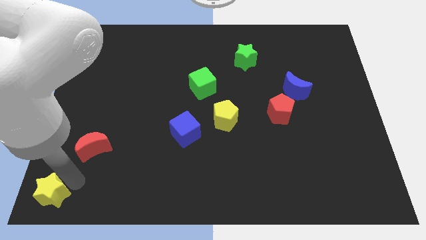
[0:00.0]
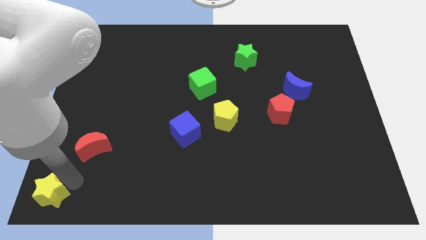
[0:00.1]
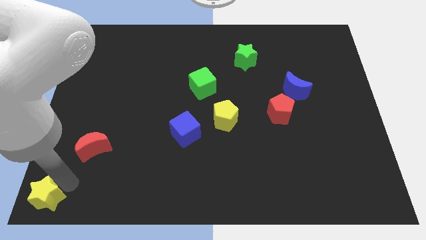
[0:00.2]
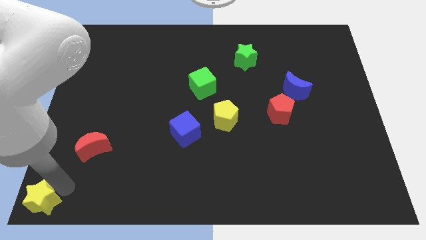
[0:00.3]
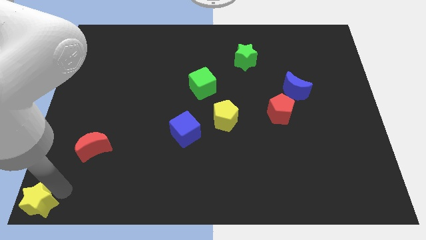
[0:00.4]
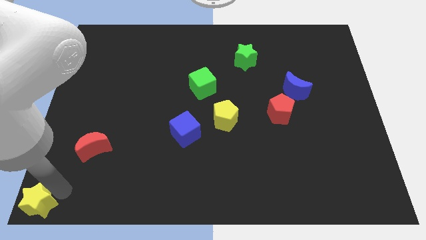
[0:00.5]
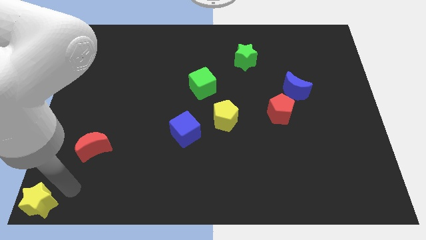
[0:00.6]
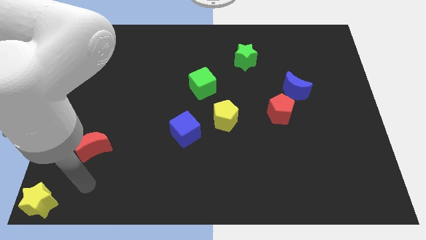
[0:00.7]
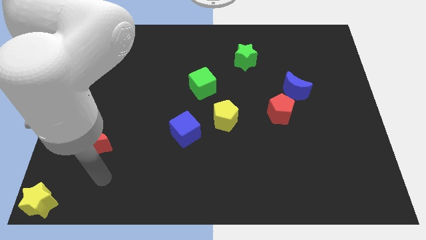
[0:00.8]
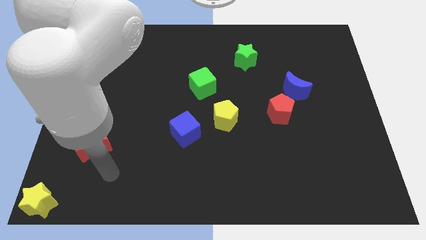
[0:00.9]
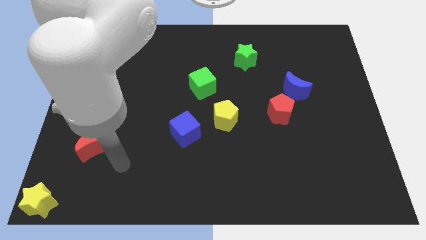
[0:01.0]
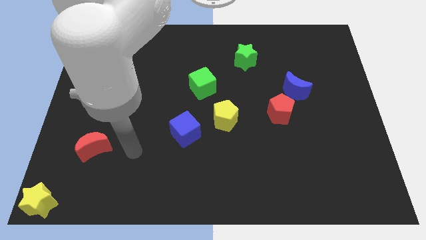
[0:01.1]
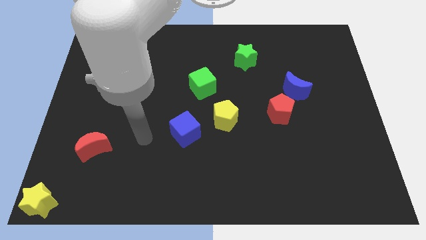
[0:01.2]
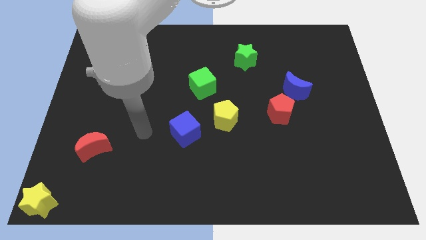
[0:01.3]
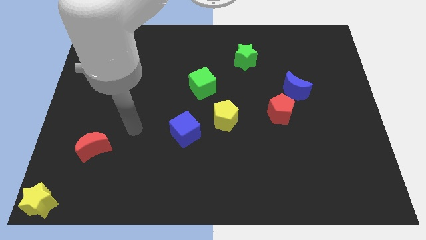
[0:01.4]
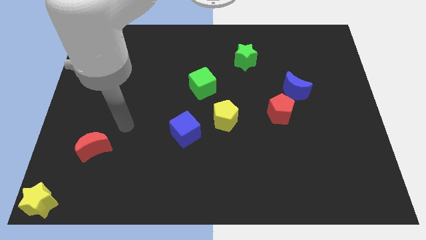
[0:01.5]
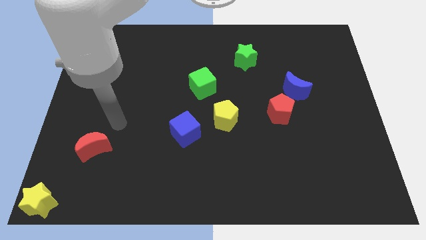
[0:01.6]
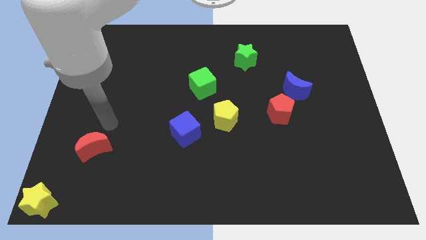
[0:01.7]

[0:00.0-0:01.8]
move the yellow star to the bottom left

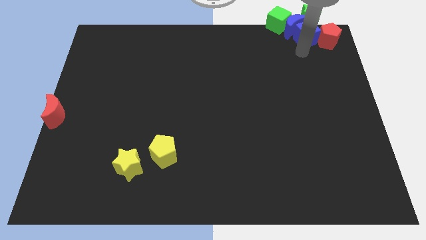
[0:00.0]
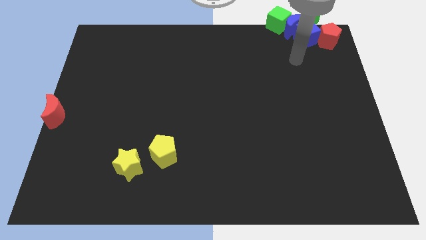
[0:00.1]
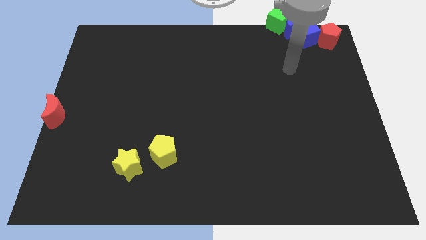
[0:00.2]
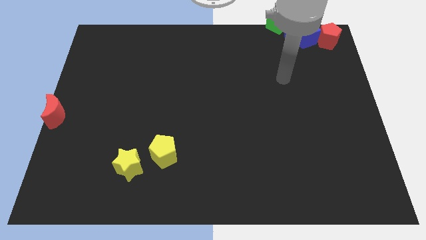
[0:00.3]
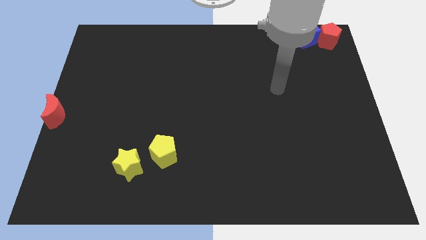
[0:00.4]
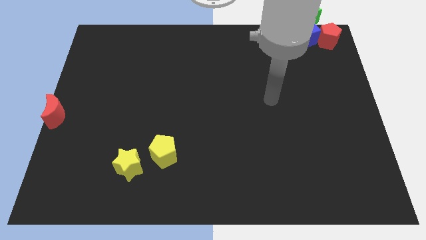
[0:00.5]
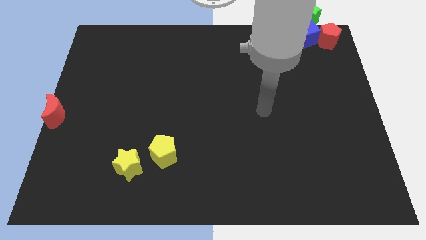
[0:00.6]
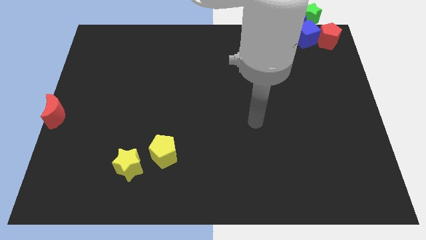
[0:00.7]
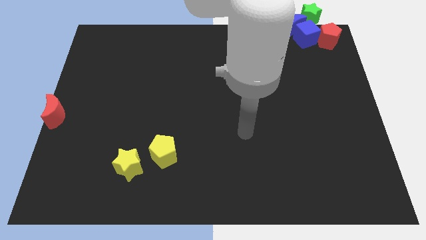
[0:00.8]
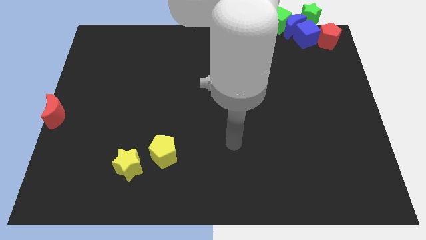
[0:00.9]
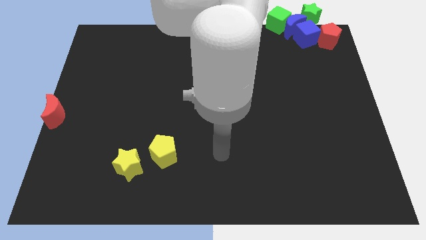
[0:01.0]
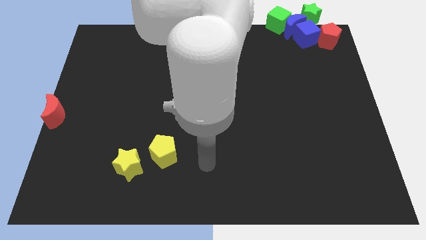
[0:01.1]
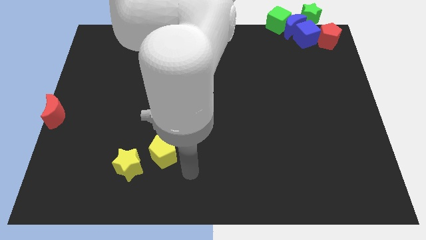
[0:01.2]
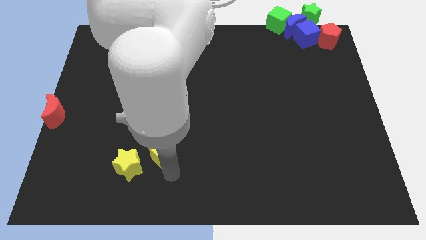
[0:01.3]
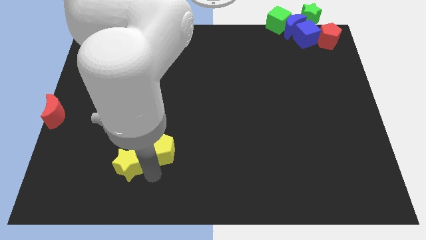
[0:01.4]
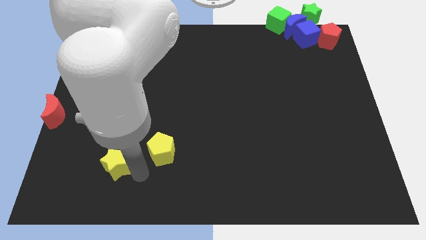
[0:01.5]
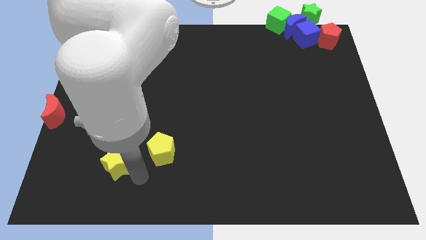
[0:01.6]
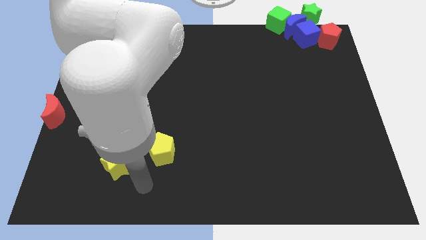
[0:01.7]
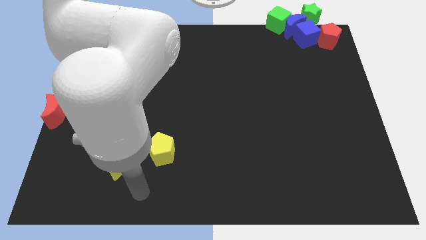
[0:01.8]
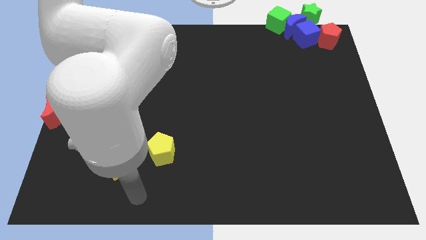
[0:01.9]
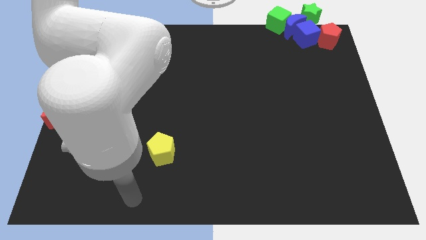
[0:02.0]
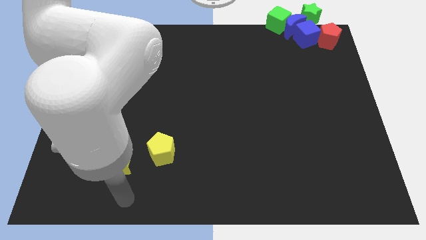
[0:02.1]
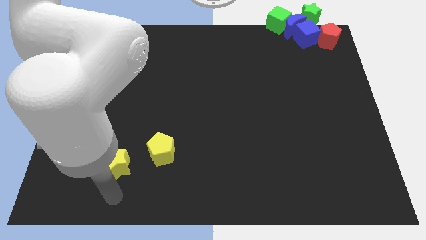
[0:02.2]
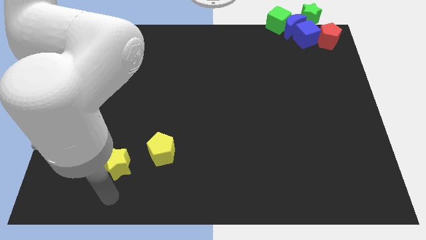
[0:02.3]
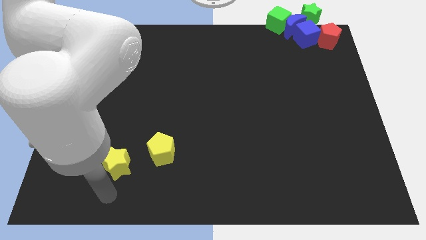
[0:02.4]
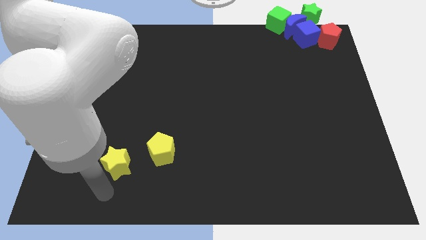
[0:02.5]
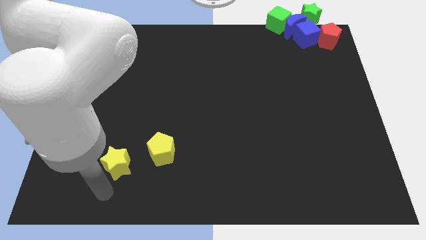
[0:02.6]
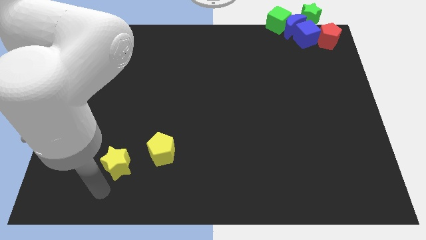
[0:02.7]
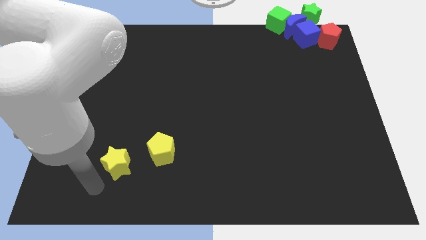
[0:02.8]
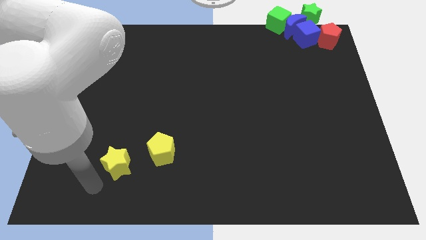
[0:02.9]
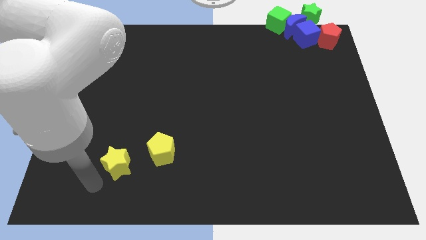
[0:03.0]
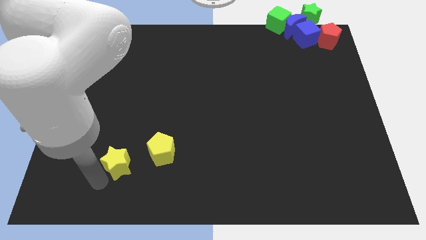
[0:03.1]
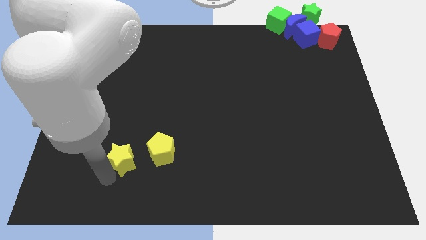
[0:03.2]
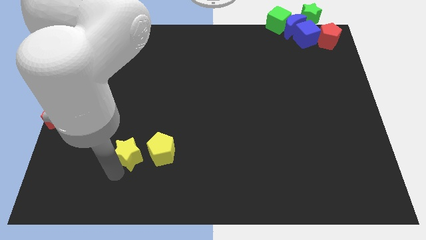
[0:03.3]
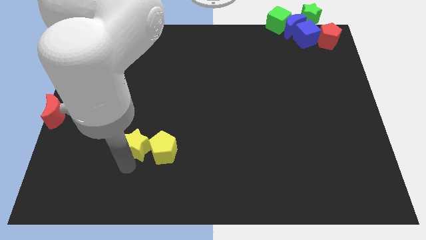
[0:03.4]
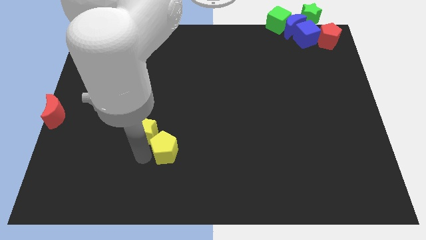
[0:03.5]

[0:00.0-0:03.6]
move the yellow star into the yellow pentagon

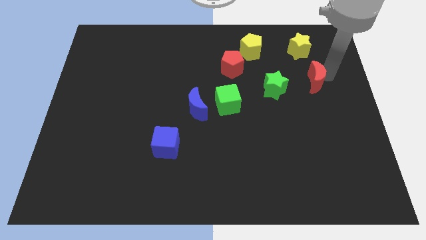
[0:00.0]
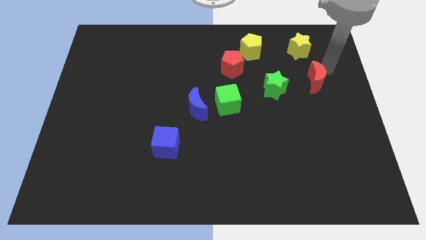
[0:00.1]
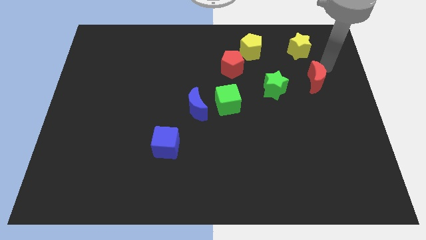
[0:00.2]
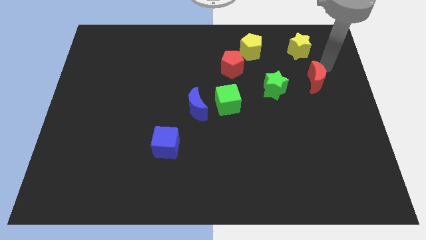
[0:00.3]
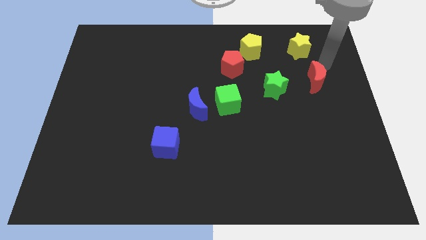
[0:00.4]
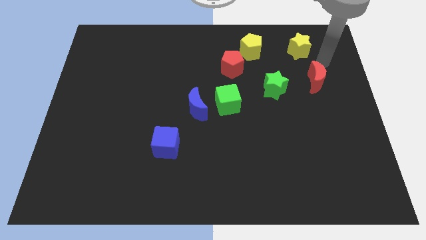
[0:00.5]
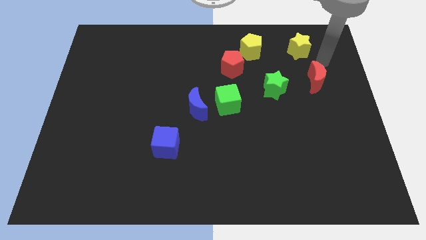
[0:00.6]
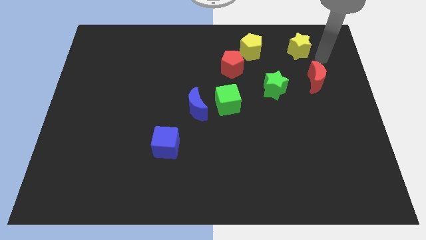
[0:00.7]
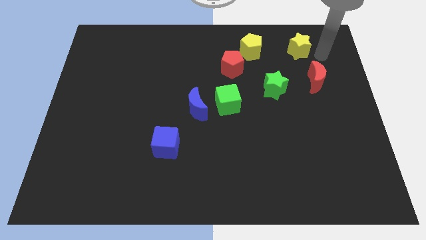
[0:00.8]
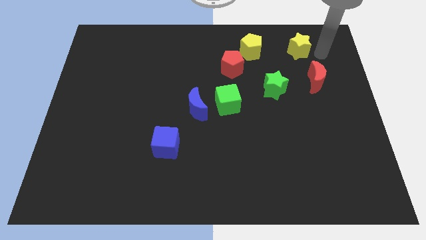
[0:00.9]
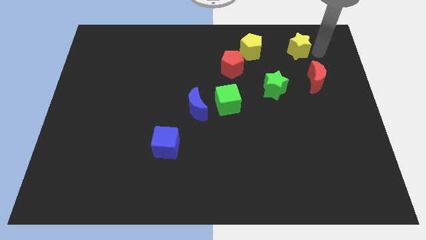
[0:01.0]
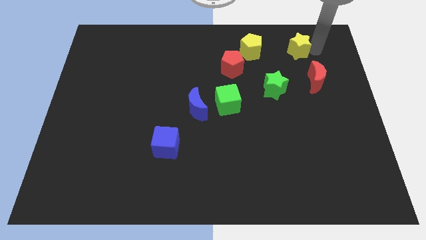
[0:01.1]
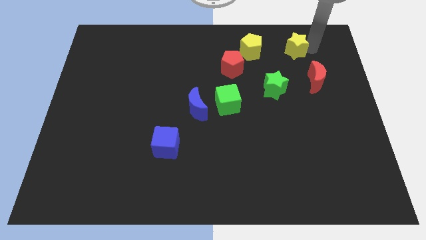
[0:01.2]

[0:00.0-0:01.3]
tap the right side of the yellow star

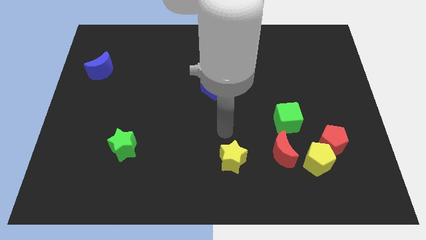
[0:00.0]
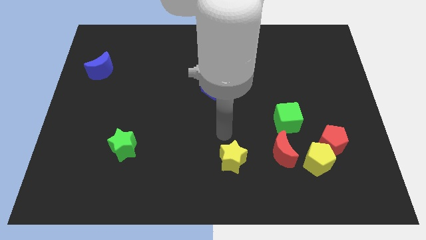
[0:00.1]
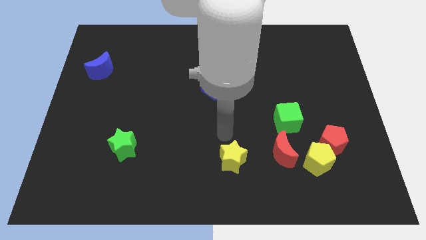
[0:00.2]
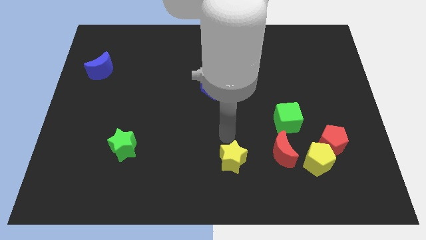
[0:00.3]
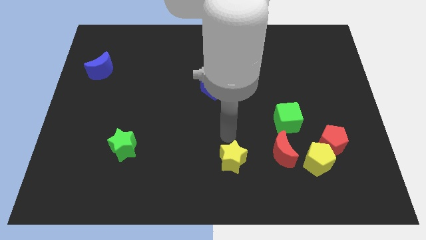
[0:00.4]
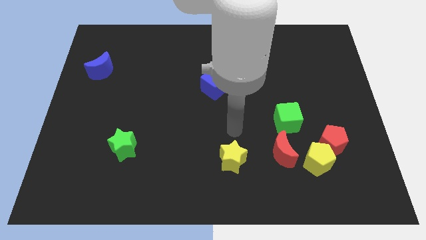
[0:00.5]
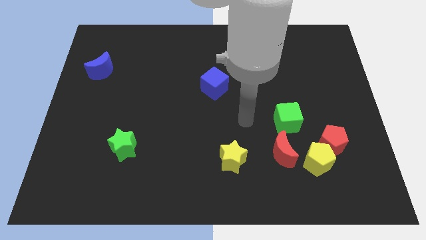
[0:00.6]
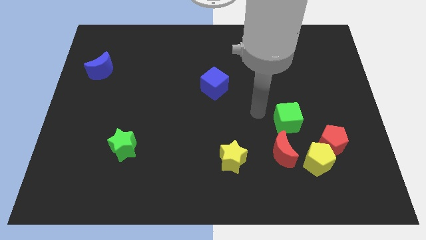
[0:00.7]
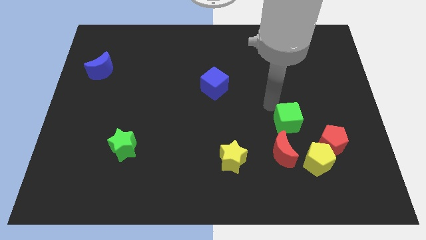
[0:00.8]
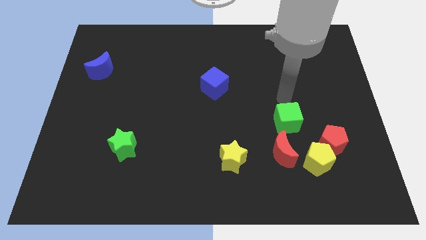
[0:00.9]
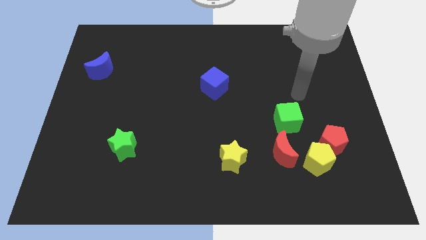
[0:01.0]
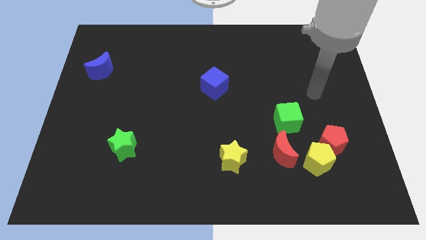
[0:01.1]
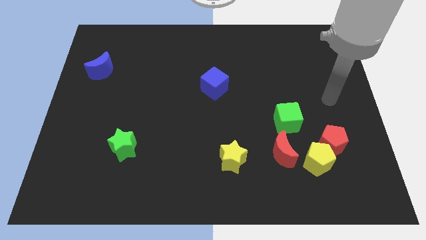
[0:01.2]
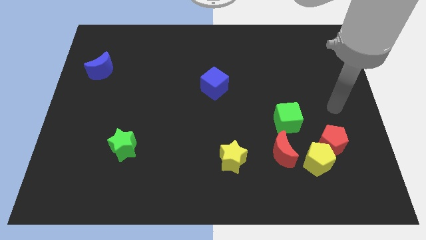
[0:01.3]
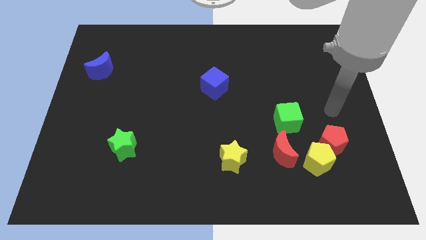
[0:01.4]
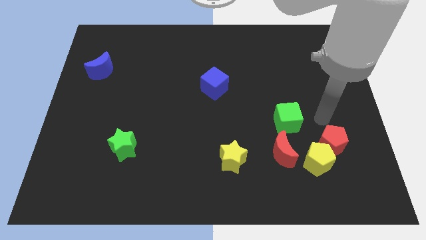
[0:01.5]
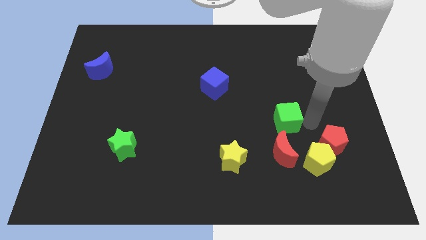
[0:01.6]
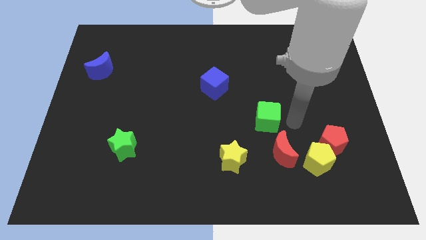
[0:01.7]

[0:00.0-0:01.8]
touch the green cube

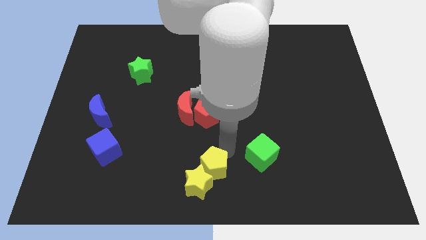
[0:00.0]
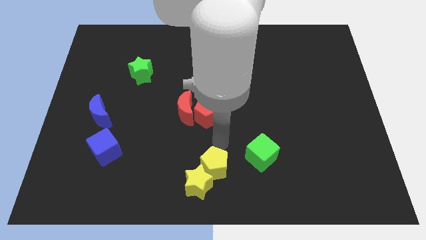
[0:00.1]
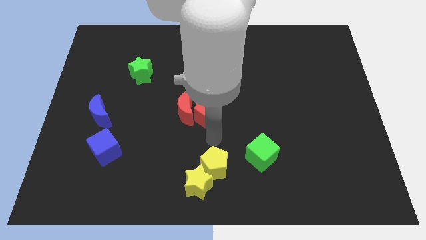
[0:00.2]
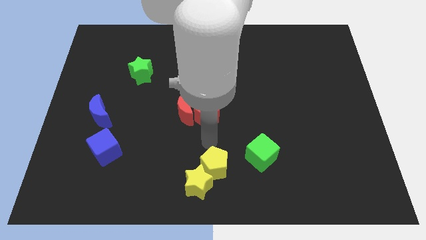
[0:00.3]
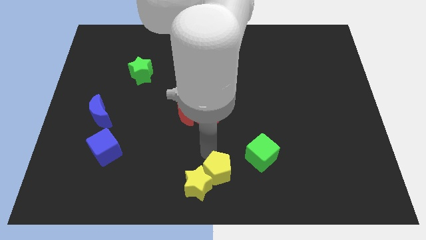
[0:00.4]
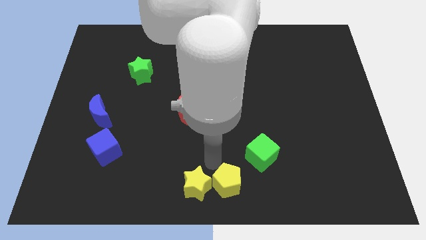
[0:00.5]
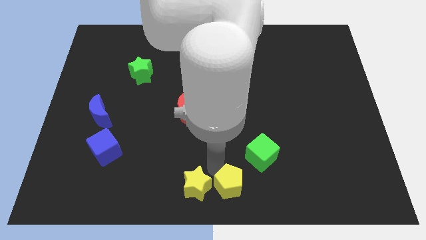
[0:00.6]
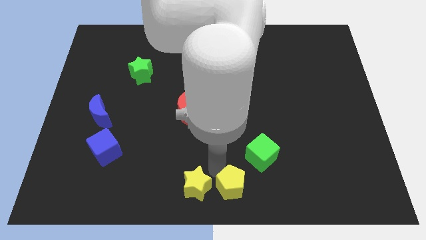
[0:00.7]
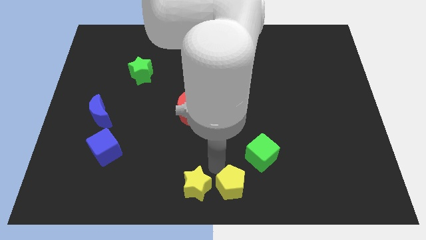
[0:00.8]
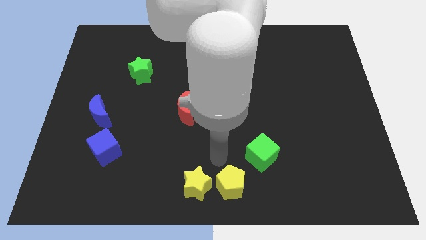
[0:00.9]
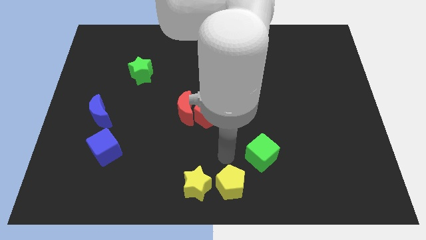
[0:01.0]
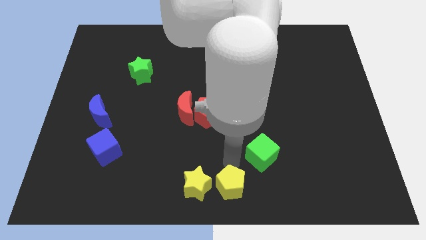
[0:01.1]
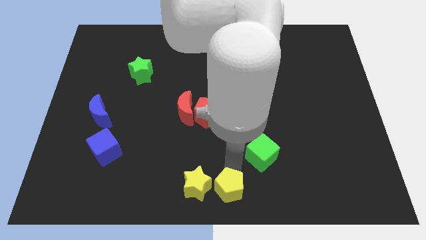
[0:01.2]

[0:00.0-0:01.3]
put the yellow pentagon to the right side of the yellow star
